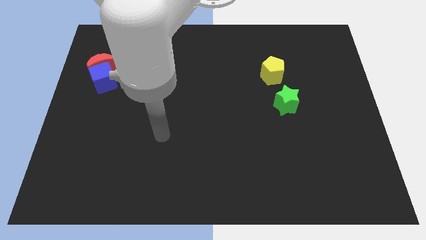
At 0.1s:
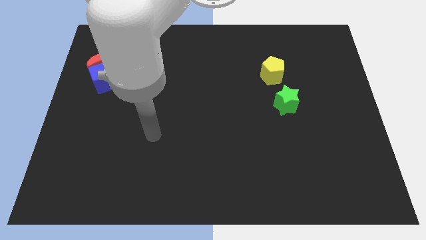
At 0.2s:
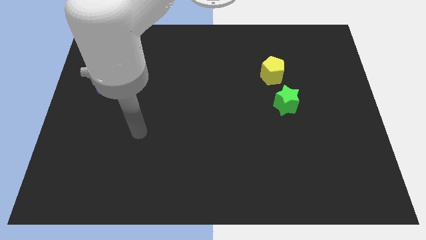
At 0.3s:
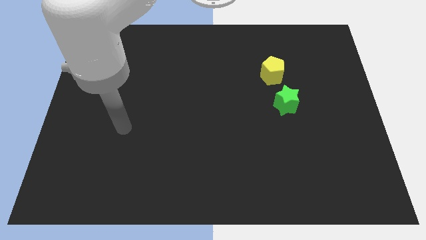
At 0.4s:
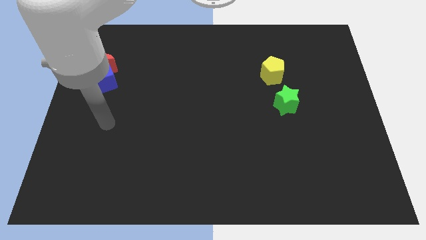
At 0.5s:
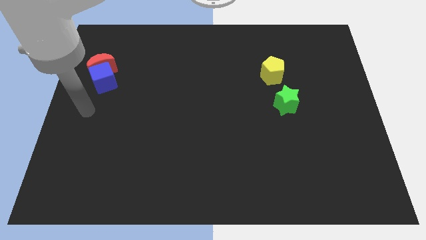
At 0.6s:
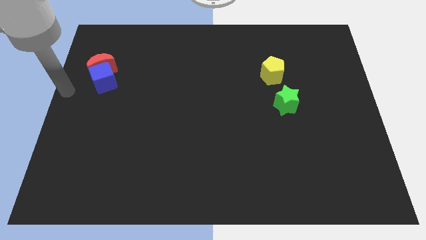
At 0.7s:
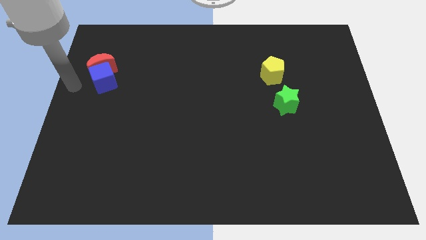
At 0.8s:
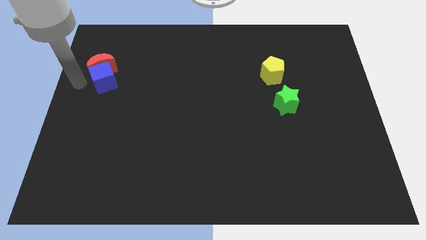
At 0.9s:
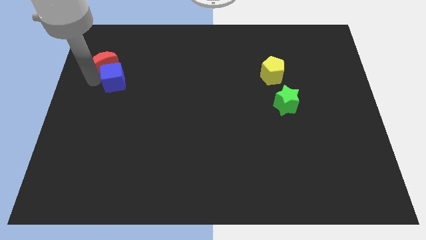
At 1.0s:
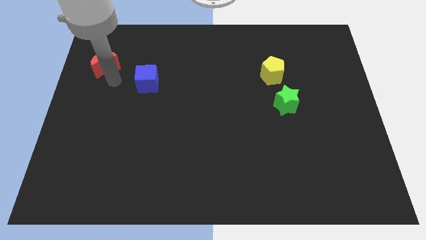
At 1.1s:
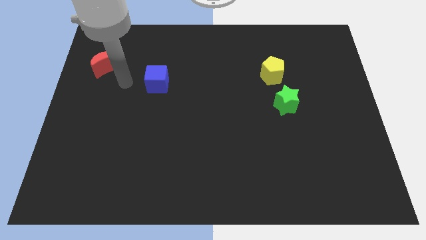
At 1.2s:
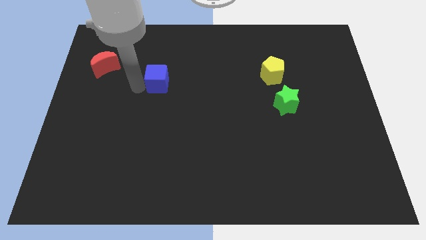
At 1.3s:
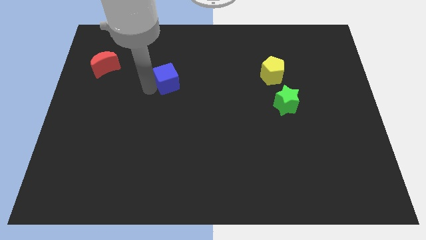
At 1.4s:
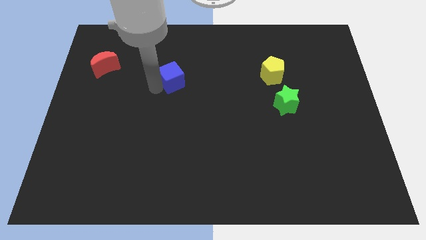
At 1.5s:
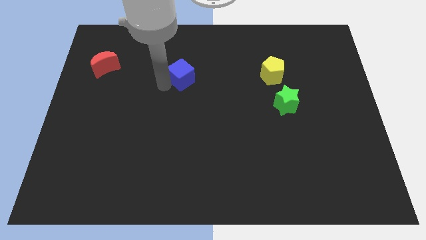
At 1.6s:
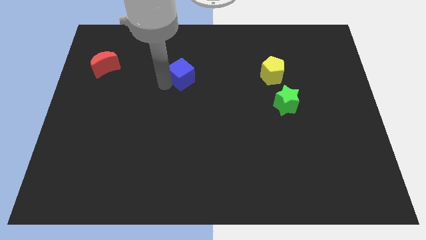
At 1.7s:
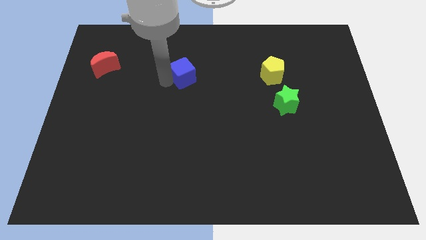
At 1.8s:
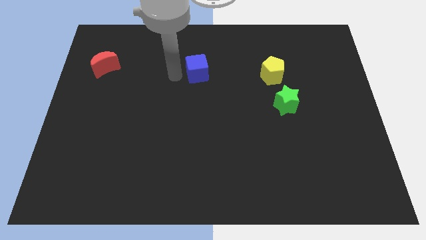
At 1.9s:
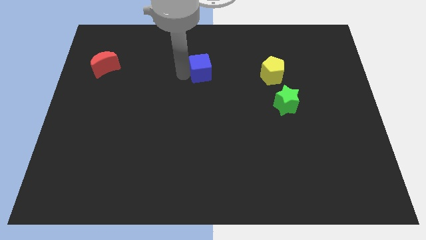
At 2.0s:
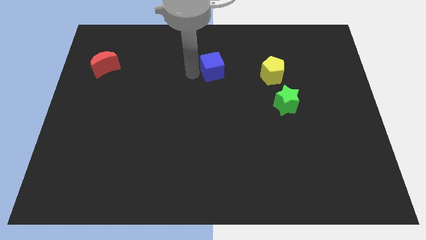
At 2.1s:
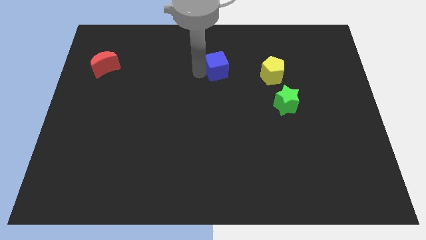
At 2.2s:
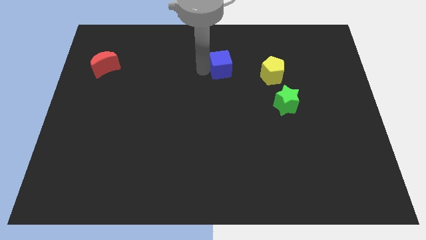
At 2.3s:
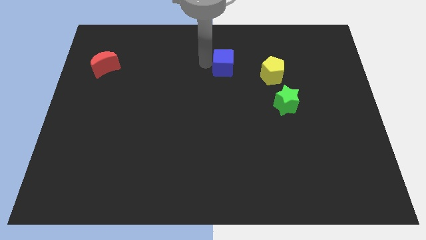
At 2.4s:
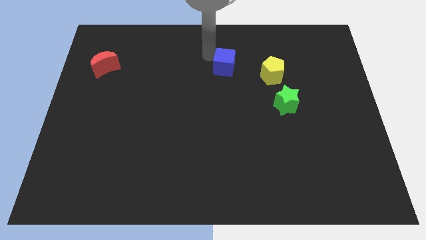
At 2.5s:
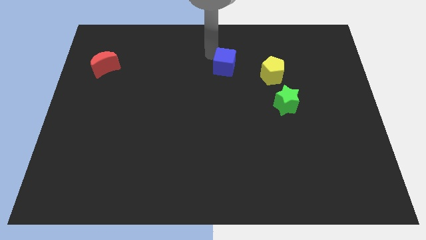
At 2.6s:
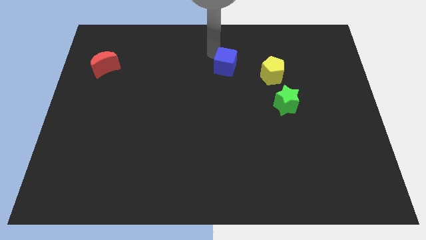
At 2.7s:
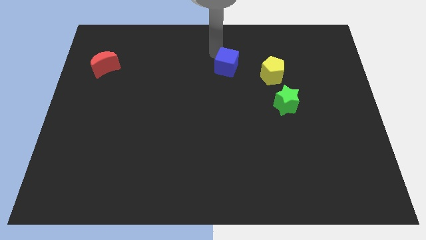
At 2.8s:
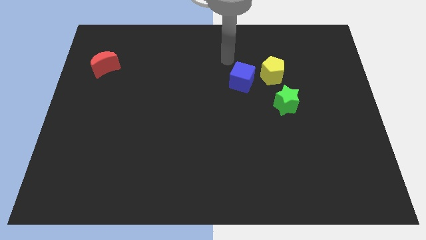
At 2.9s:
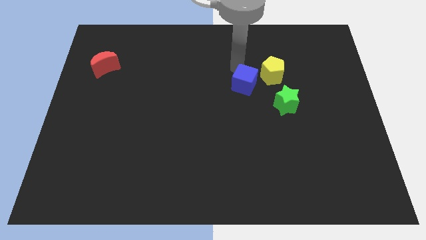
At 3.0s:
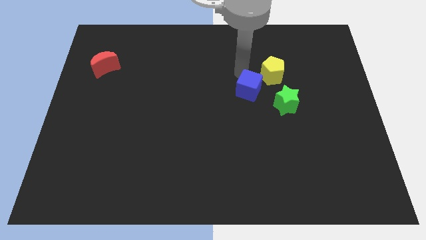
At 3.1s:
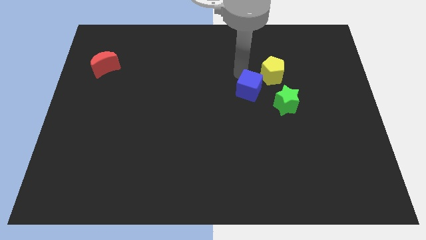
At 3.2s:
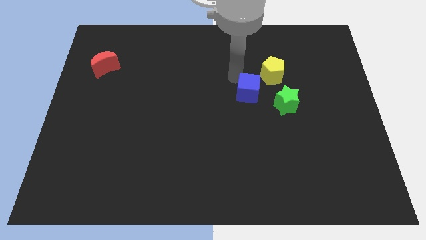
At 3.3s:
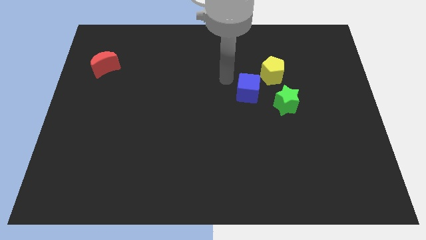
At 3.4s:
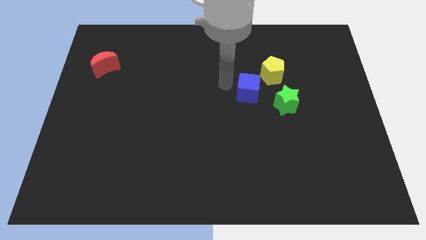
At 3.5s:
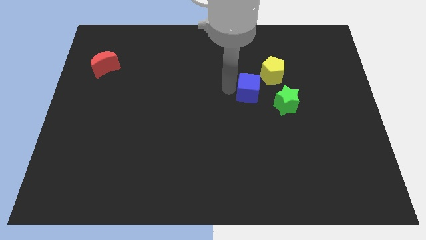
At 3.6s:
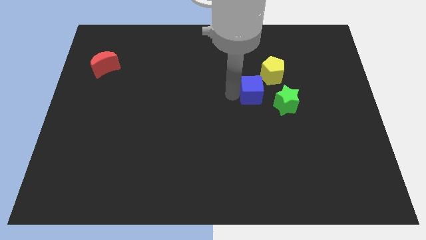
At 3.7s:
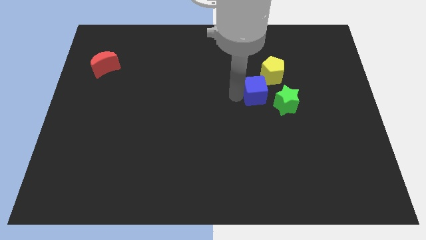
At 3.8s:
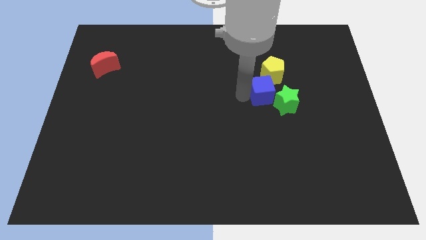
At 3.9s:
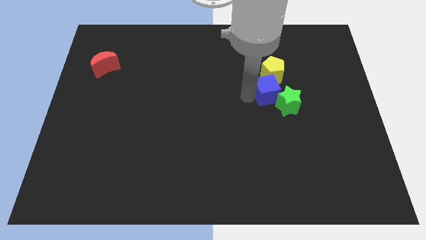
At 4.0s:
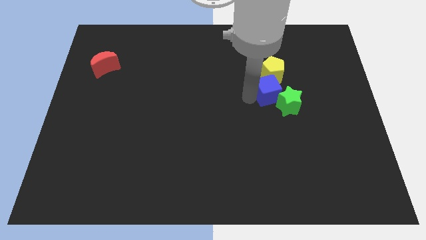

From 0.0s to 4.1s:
move the blue block towards the green star

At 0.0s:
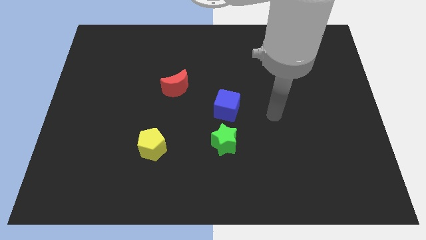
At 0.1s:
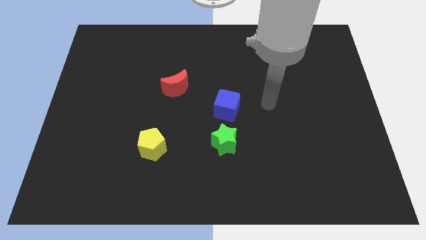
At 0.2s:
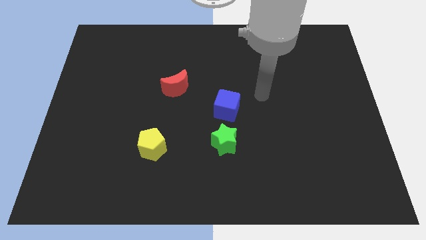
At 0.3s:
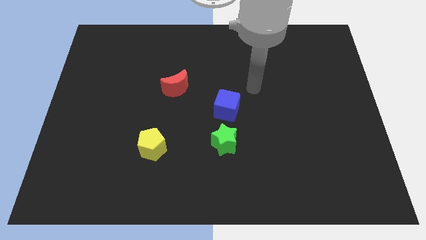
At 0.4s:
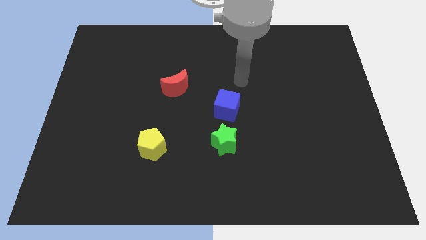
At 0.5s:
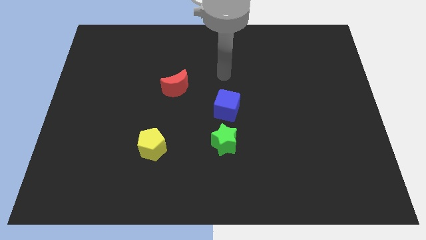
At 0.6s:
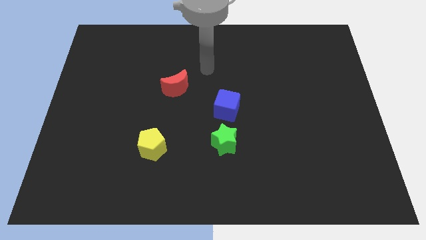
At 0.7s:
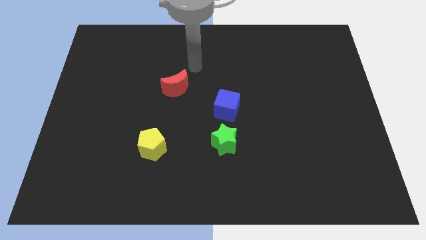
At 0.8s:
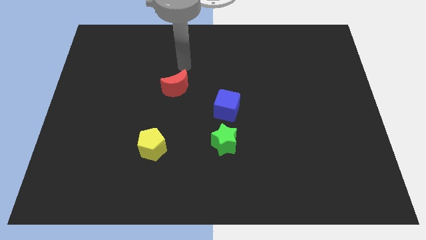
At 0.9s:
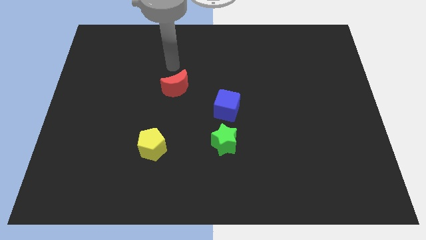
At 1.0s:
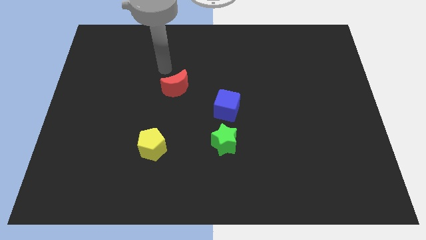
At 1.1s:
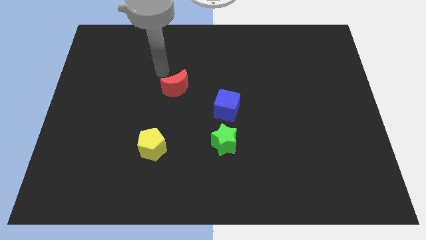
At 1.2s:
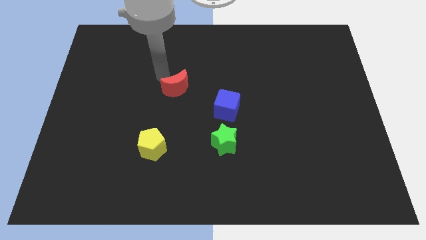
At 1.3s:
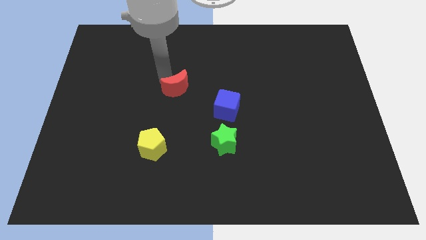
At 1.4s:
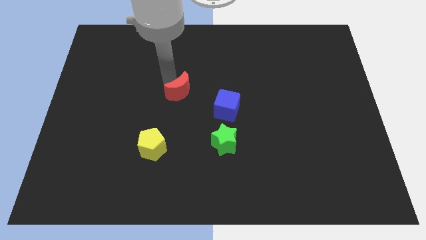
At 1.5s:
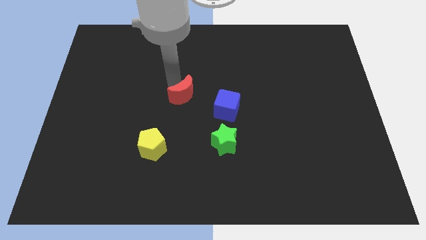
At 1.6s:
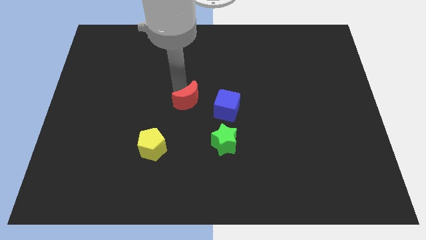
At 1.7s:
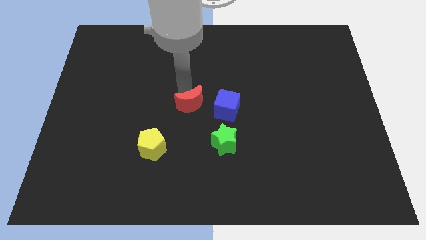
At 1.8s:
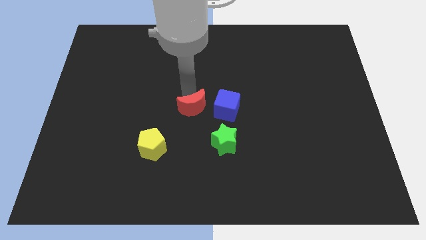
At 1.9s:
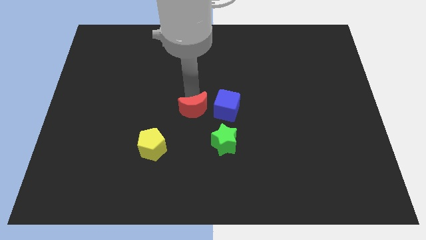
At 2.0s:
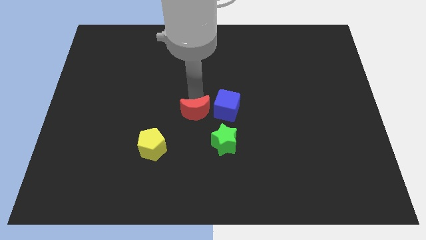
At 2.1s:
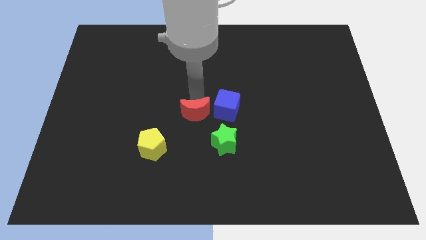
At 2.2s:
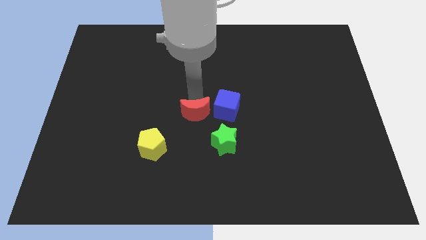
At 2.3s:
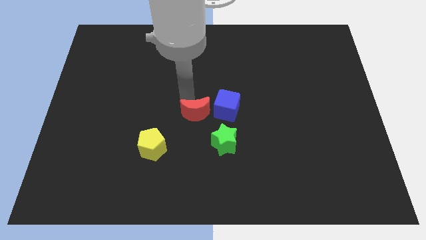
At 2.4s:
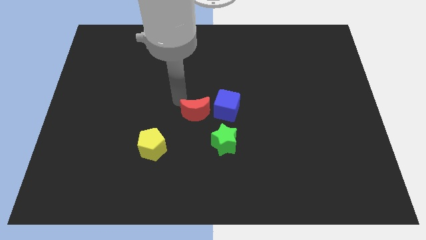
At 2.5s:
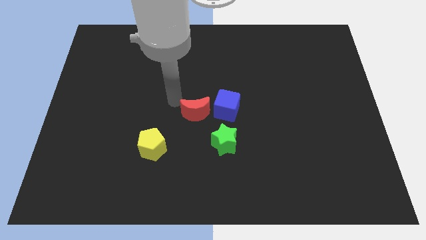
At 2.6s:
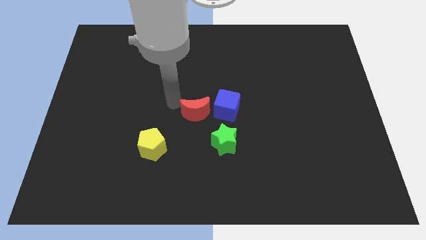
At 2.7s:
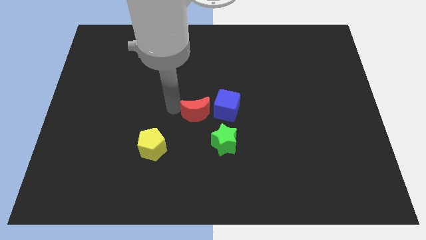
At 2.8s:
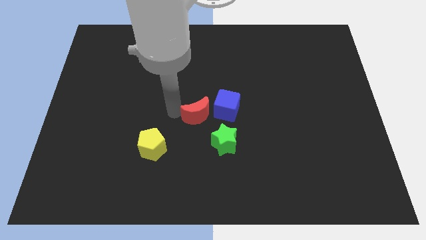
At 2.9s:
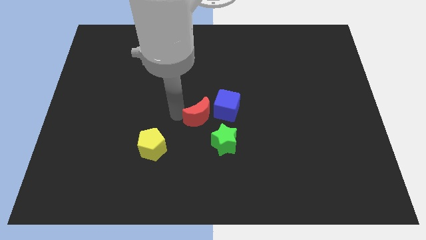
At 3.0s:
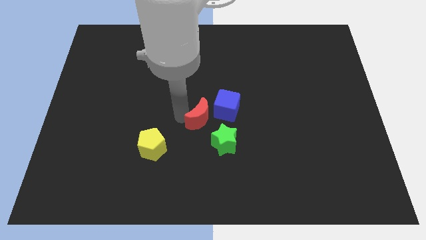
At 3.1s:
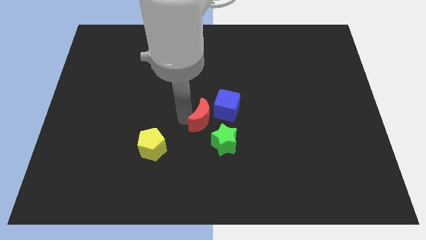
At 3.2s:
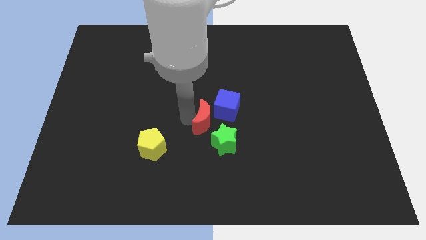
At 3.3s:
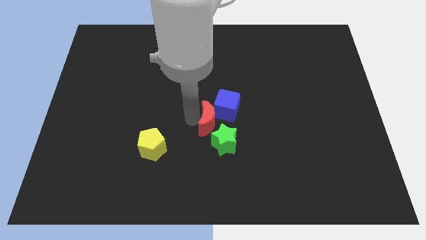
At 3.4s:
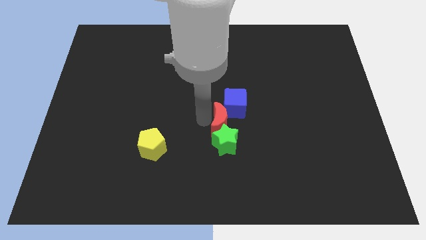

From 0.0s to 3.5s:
slide the red block towards the blue cube

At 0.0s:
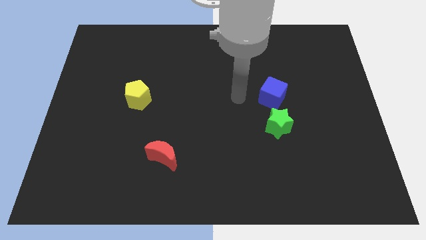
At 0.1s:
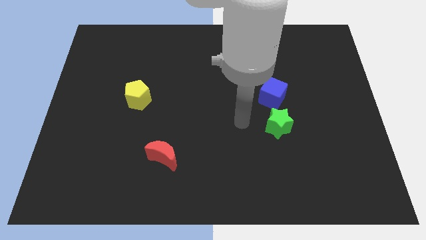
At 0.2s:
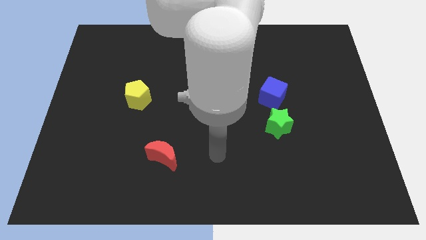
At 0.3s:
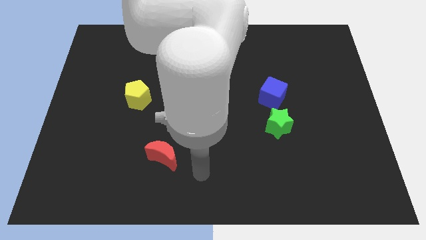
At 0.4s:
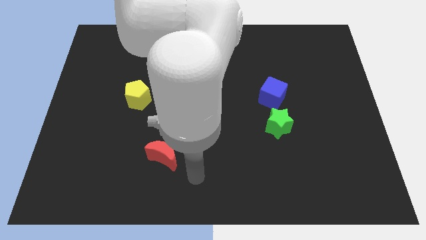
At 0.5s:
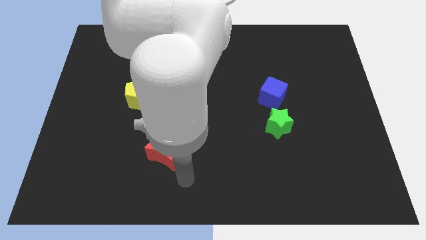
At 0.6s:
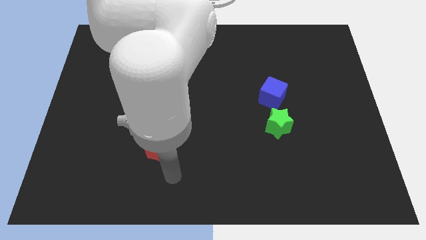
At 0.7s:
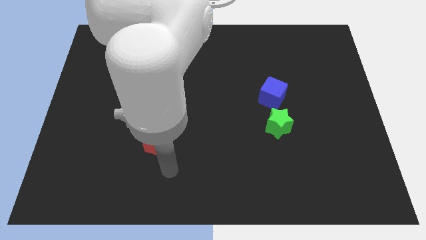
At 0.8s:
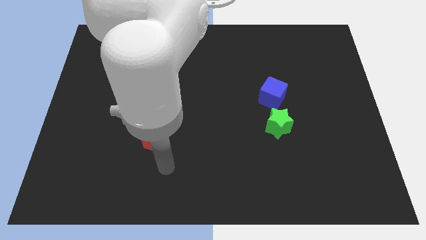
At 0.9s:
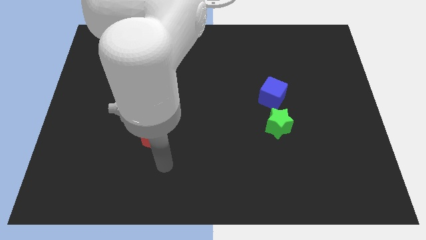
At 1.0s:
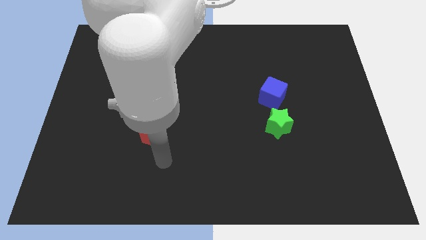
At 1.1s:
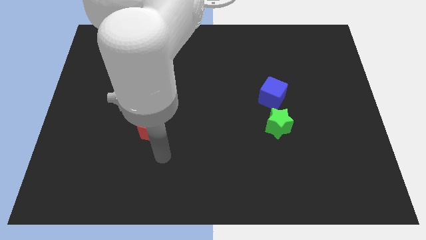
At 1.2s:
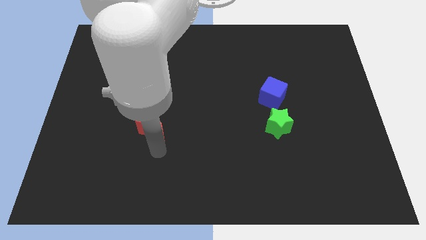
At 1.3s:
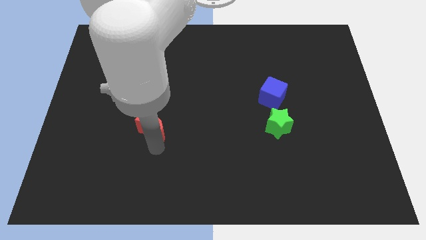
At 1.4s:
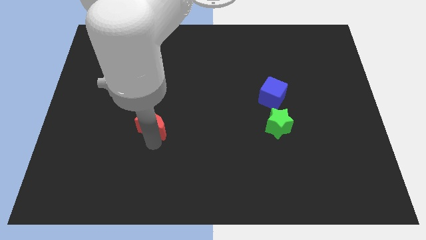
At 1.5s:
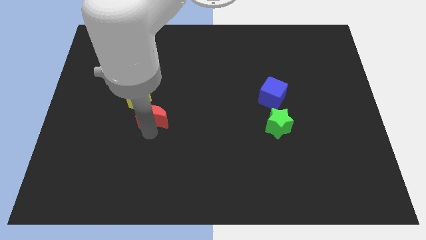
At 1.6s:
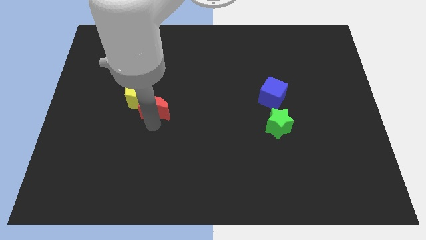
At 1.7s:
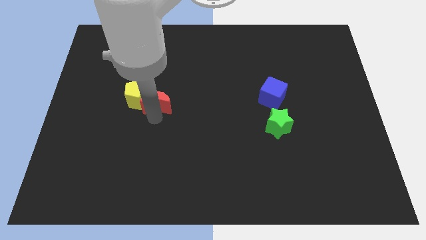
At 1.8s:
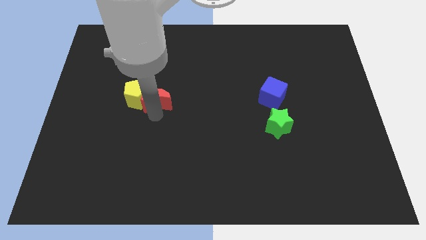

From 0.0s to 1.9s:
push the moon close to the yellow pentagon
